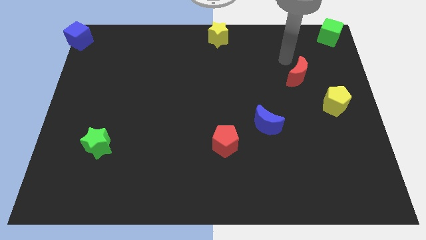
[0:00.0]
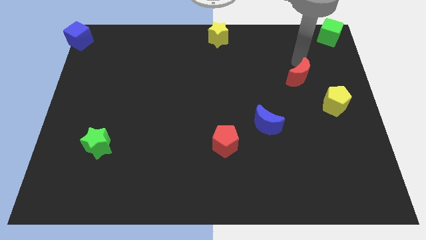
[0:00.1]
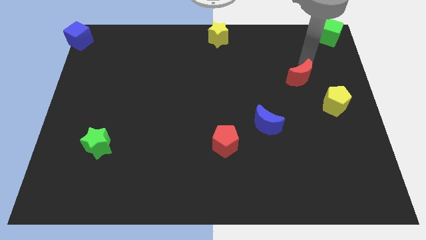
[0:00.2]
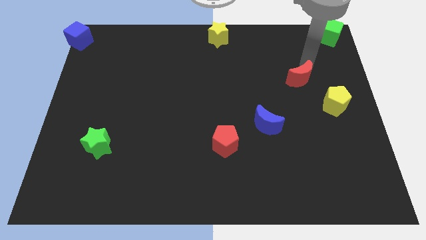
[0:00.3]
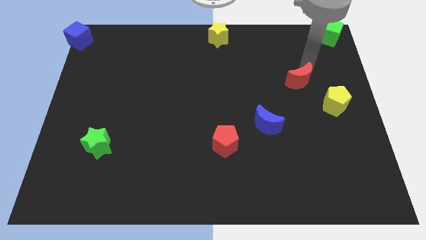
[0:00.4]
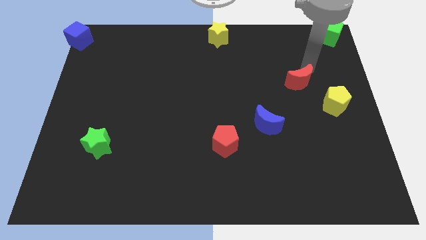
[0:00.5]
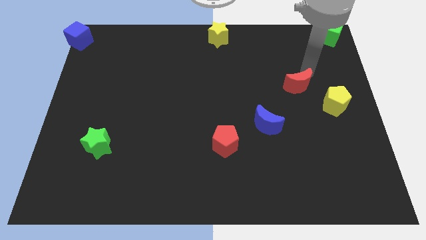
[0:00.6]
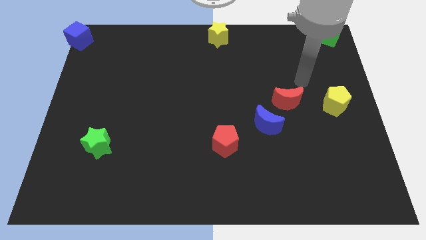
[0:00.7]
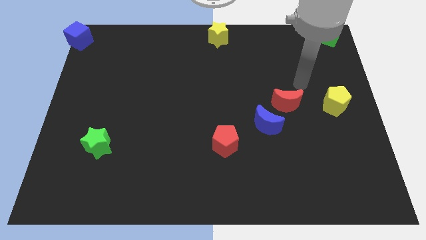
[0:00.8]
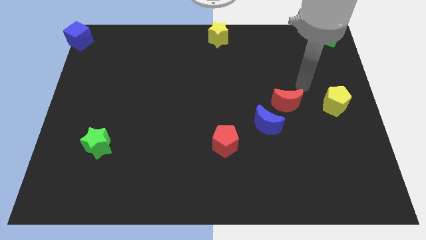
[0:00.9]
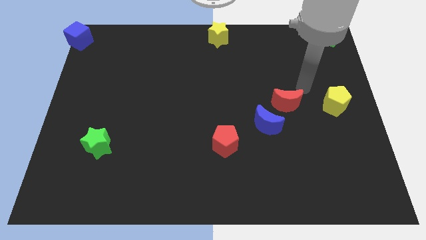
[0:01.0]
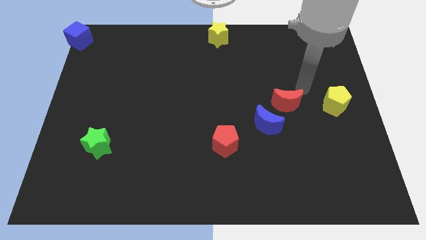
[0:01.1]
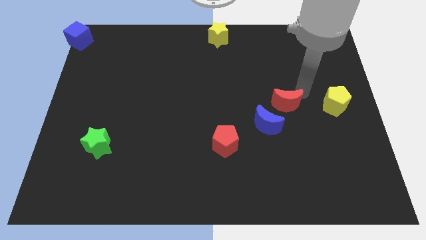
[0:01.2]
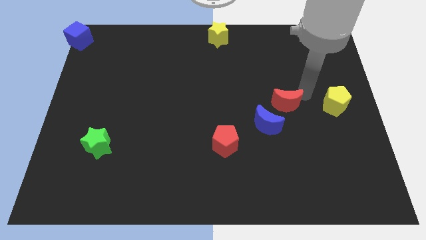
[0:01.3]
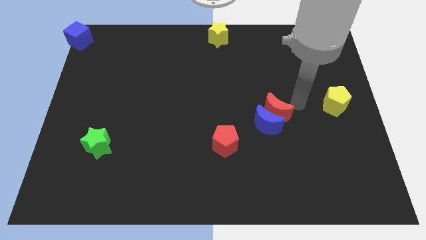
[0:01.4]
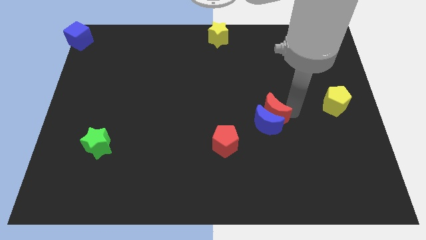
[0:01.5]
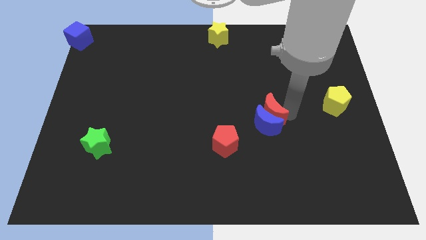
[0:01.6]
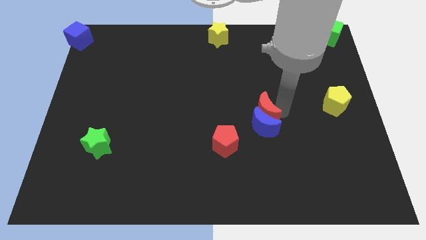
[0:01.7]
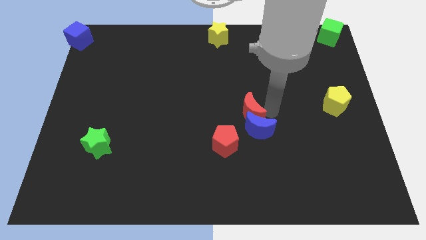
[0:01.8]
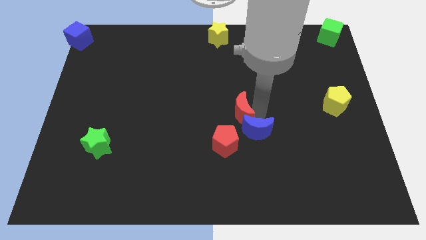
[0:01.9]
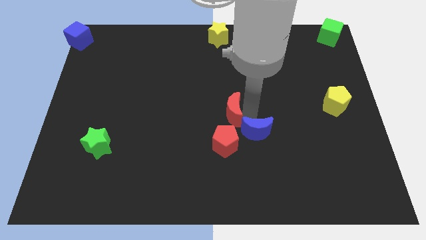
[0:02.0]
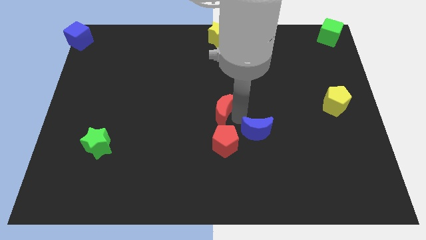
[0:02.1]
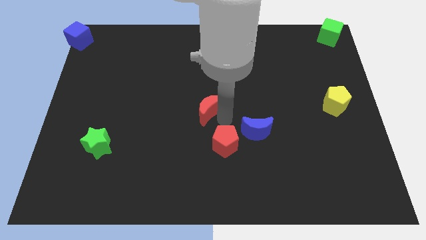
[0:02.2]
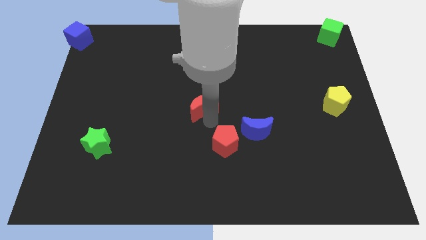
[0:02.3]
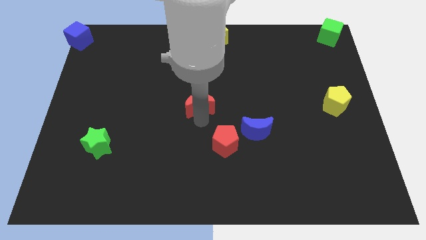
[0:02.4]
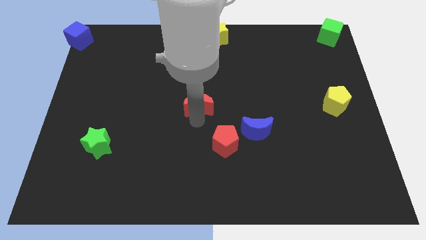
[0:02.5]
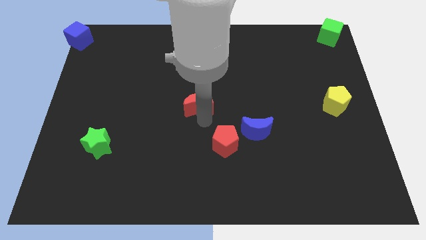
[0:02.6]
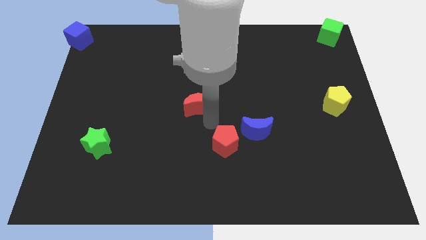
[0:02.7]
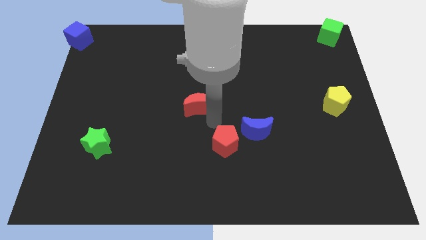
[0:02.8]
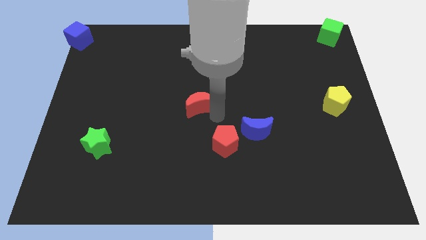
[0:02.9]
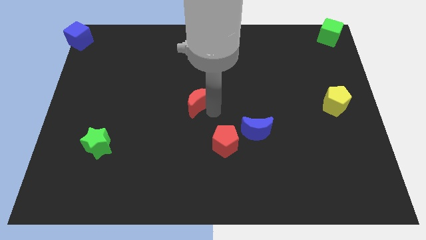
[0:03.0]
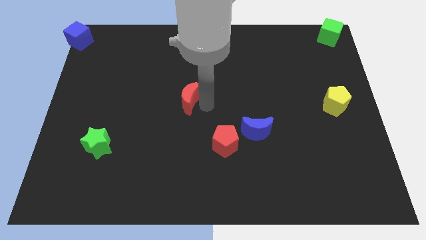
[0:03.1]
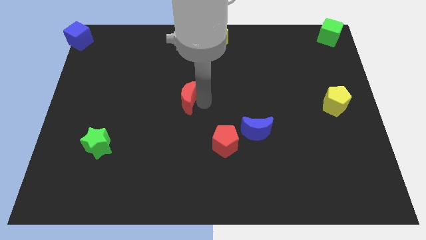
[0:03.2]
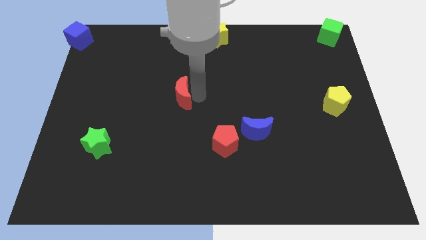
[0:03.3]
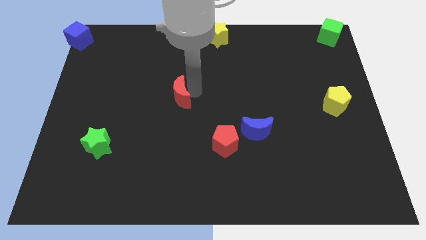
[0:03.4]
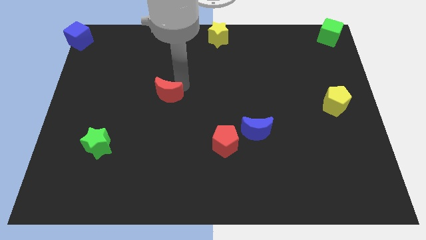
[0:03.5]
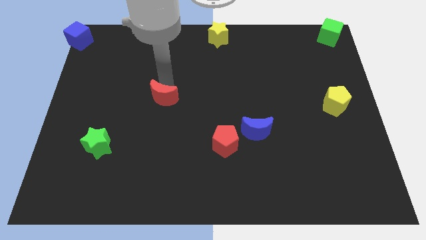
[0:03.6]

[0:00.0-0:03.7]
move the red crescent to form a triangle with green star and red pentagon

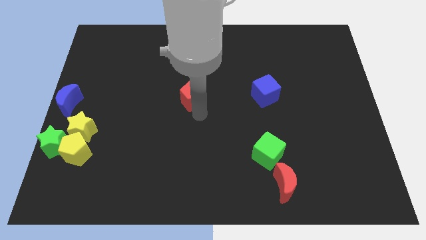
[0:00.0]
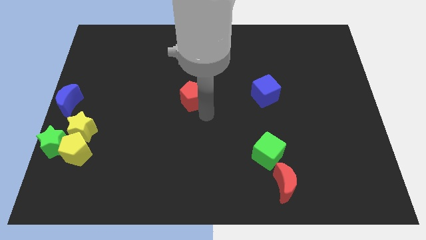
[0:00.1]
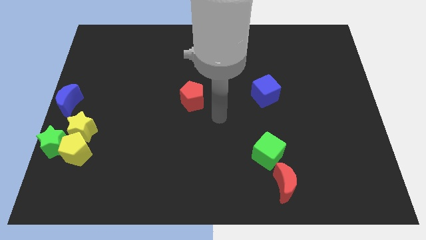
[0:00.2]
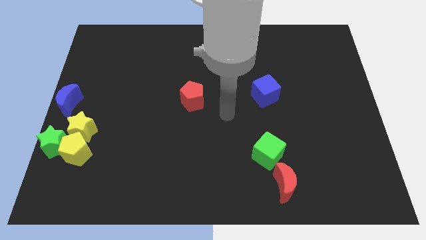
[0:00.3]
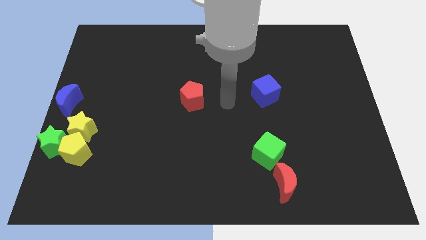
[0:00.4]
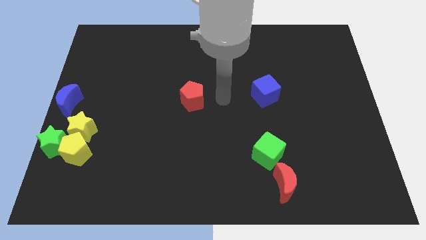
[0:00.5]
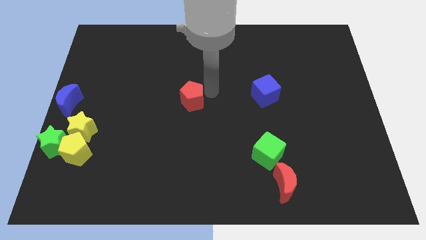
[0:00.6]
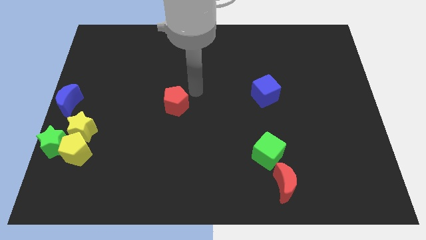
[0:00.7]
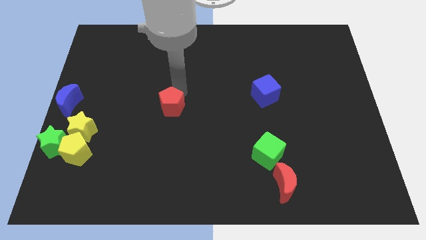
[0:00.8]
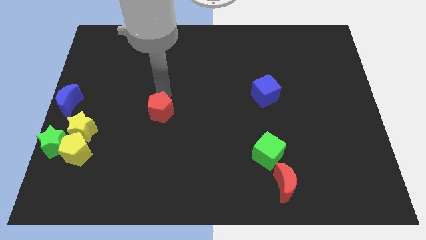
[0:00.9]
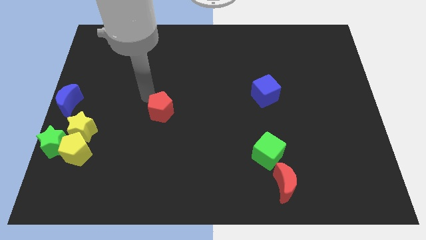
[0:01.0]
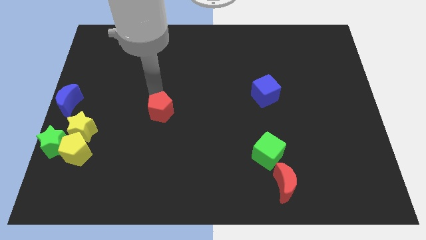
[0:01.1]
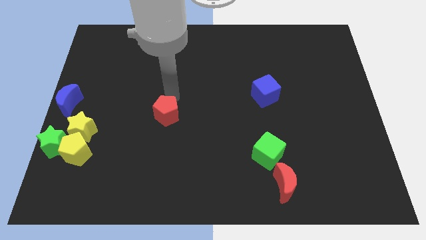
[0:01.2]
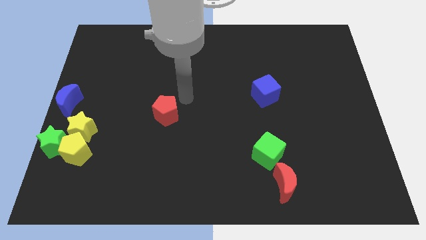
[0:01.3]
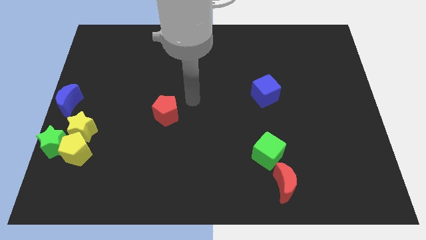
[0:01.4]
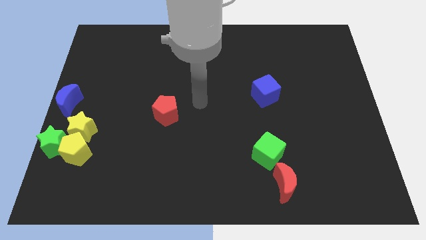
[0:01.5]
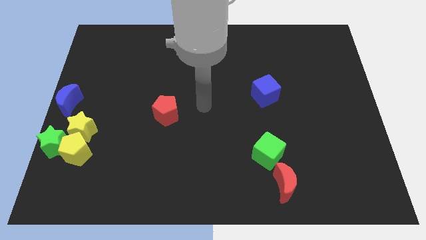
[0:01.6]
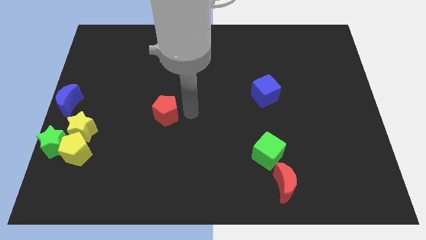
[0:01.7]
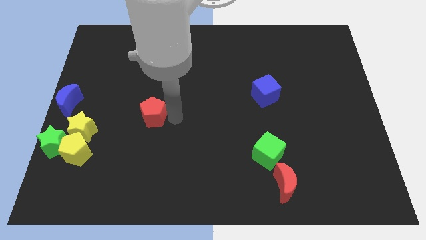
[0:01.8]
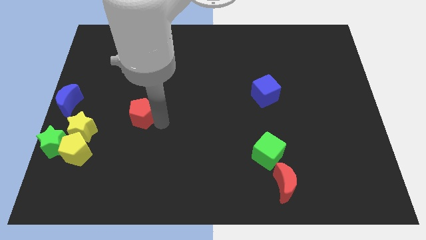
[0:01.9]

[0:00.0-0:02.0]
drag the red pentagon close to the yellow star

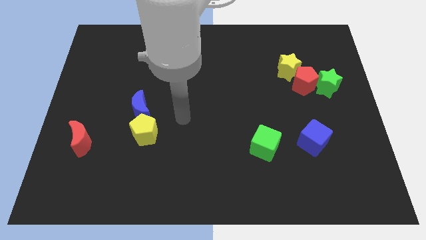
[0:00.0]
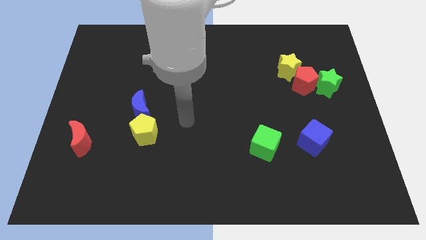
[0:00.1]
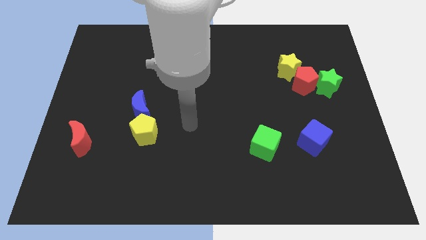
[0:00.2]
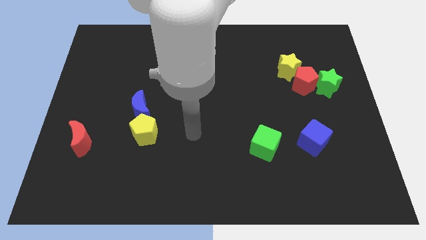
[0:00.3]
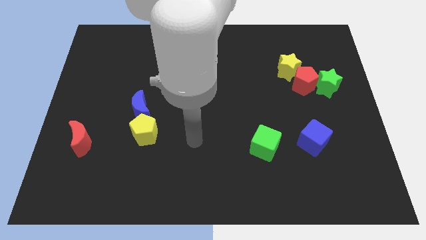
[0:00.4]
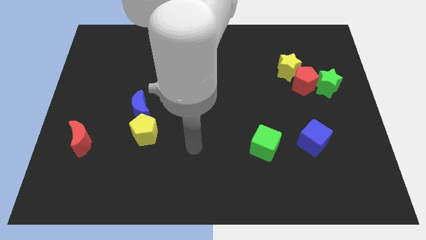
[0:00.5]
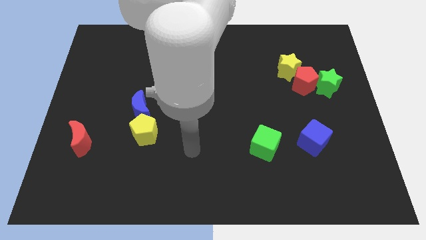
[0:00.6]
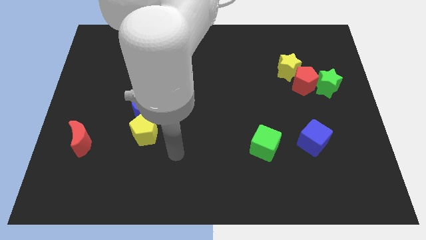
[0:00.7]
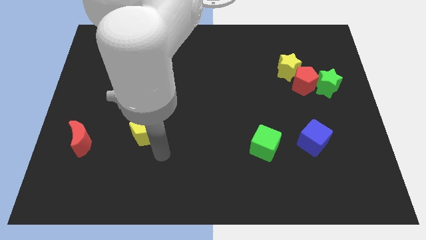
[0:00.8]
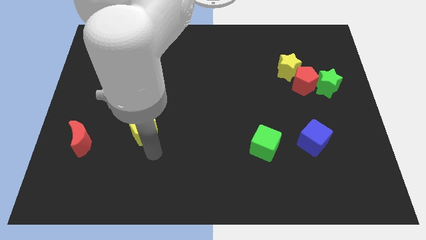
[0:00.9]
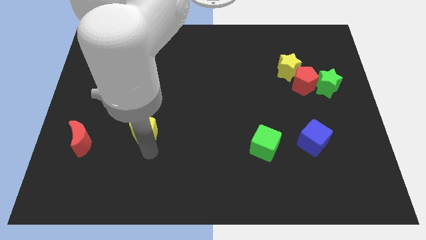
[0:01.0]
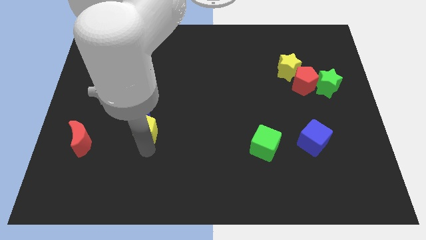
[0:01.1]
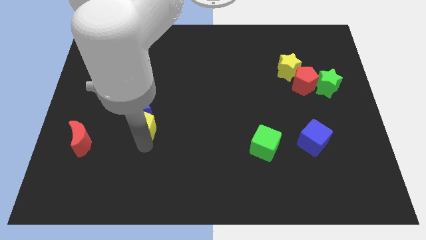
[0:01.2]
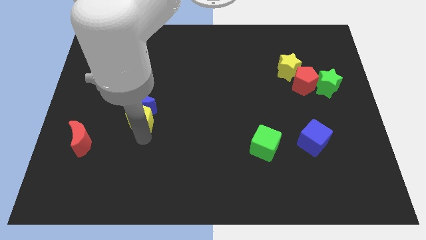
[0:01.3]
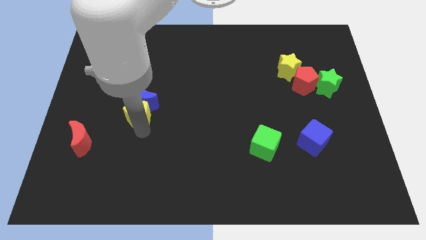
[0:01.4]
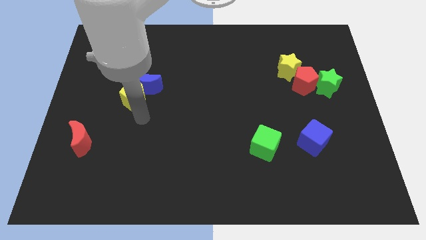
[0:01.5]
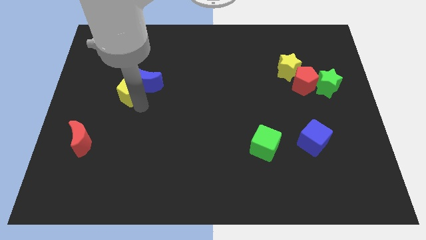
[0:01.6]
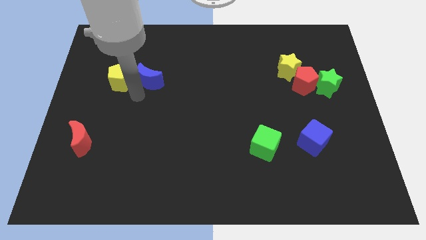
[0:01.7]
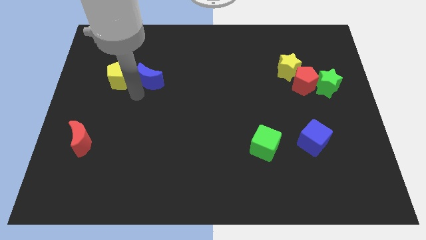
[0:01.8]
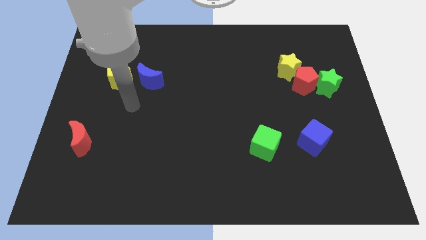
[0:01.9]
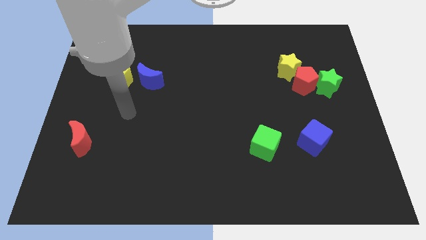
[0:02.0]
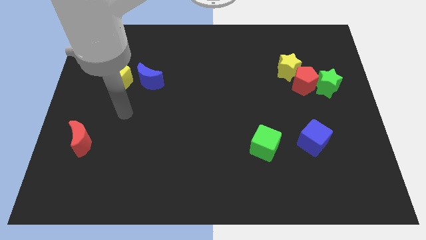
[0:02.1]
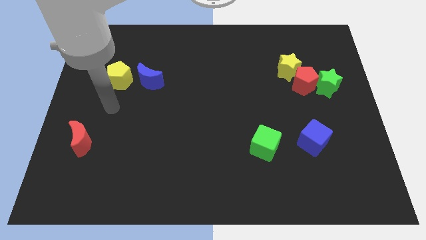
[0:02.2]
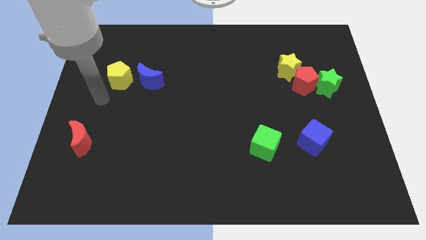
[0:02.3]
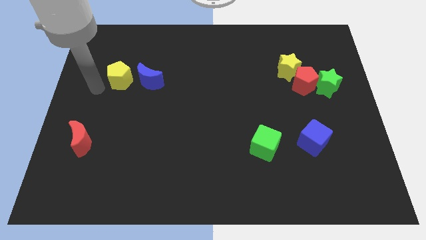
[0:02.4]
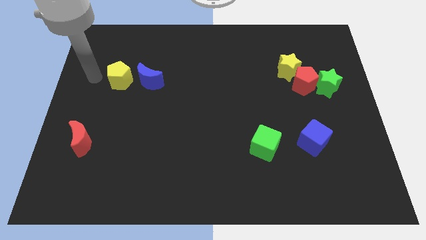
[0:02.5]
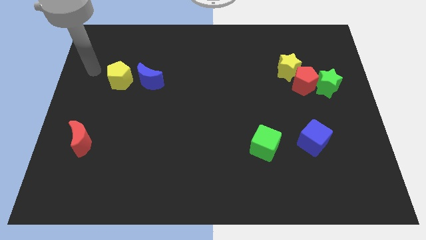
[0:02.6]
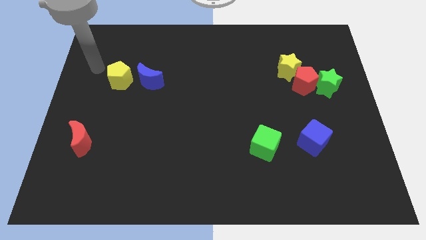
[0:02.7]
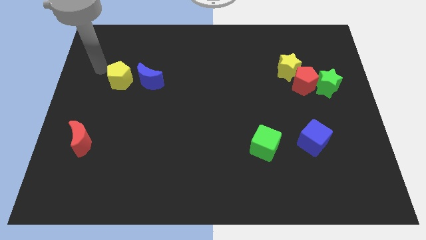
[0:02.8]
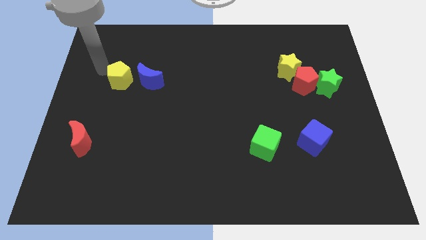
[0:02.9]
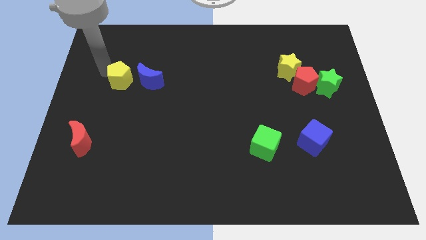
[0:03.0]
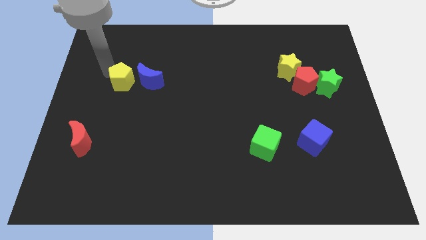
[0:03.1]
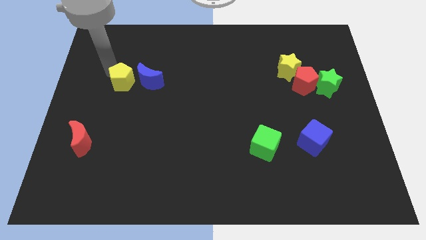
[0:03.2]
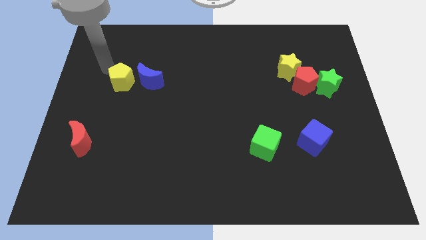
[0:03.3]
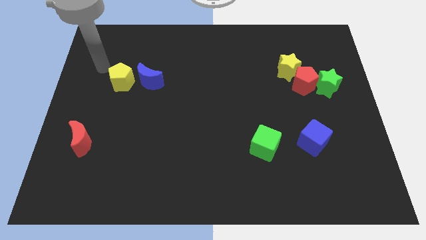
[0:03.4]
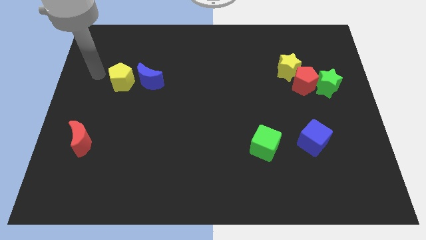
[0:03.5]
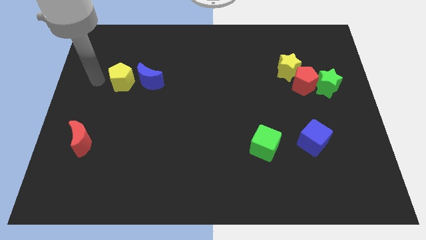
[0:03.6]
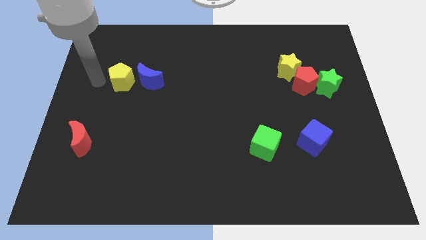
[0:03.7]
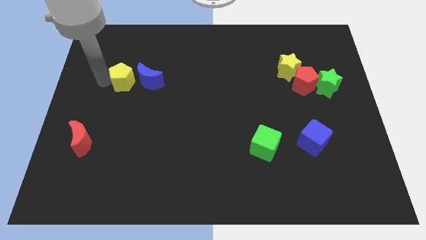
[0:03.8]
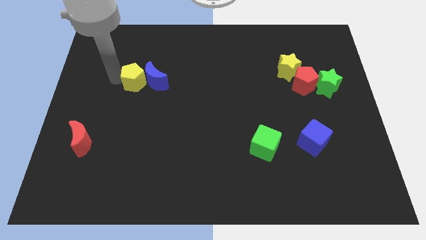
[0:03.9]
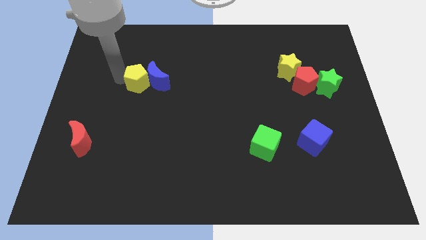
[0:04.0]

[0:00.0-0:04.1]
push blue crescent with the yellow pentagon
